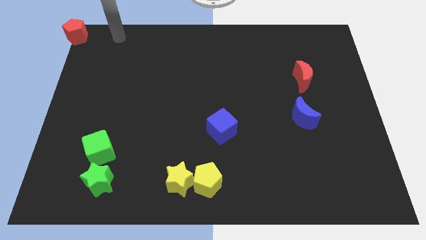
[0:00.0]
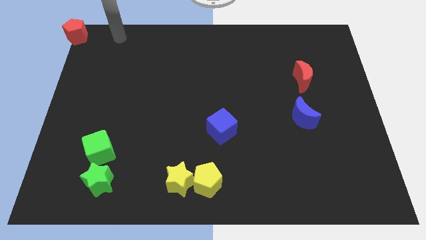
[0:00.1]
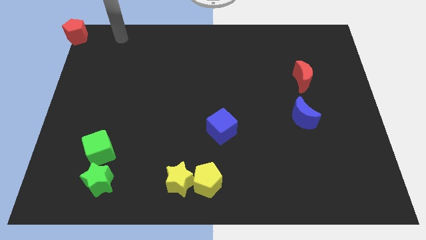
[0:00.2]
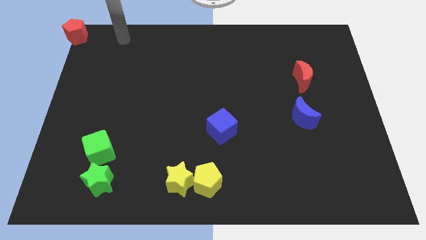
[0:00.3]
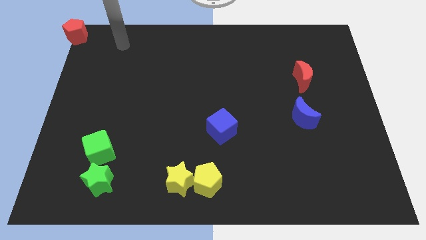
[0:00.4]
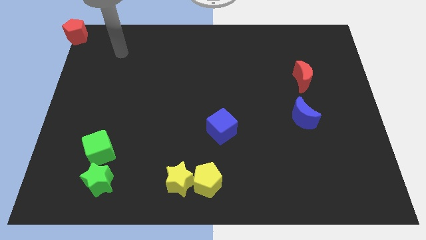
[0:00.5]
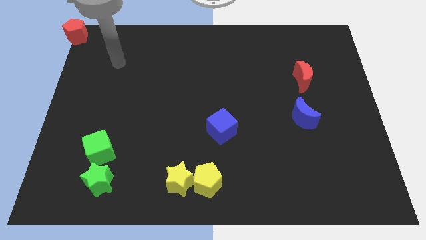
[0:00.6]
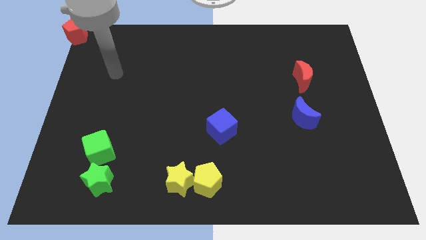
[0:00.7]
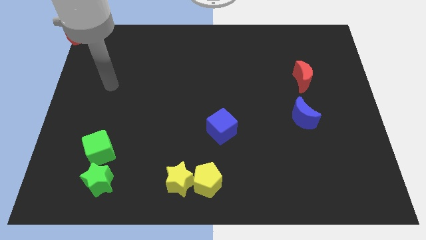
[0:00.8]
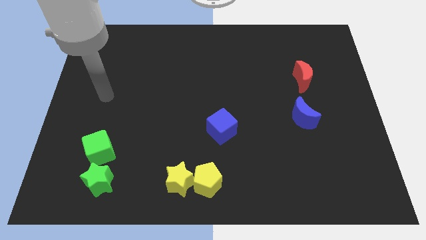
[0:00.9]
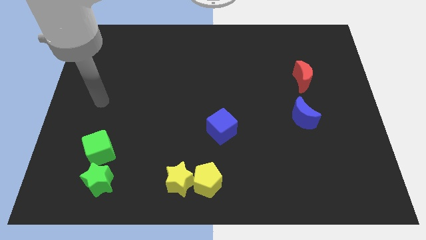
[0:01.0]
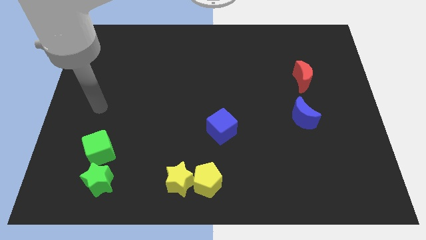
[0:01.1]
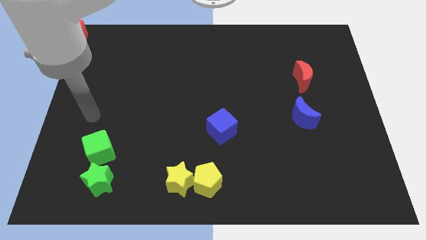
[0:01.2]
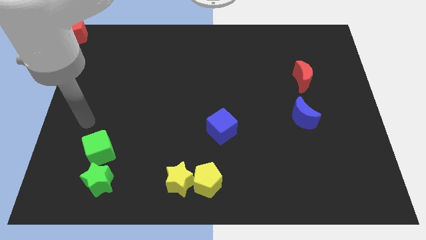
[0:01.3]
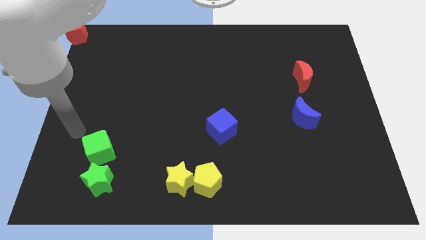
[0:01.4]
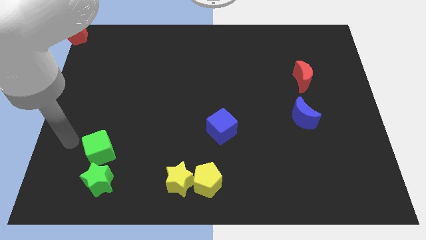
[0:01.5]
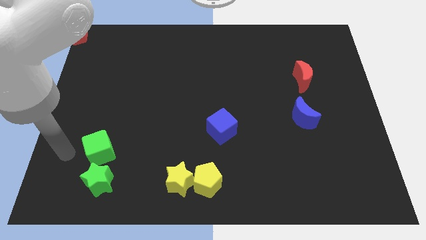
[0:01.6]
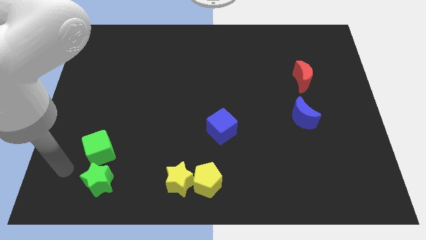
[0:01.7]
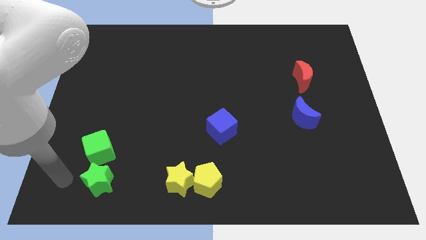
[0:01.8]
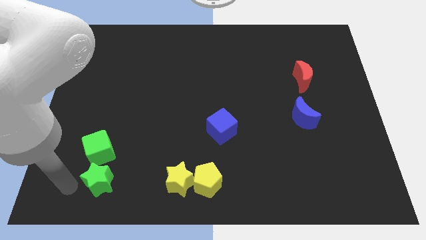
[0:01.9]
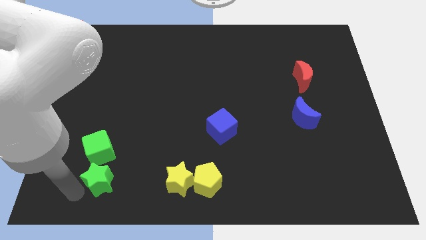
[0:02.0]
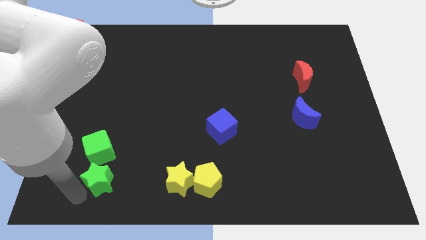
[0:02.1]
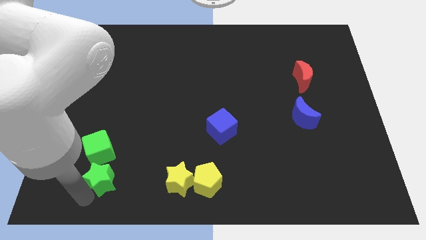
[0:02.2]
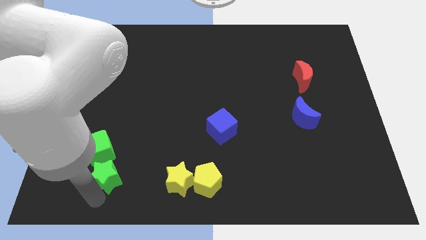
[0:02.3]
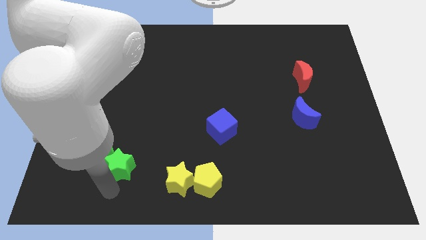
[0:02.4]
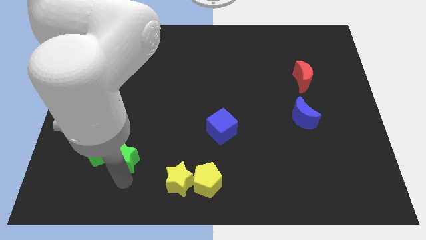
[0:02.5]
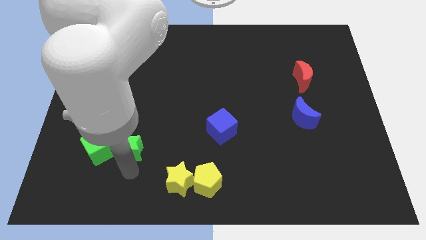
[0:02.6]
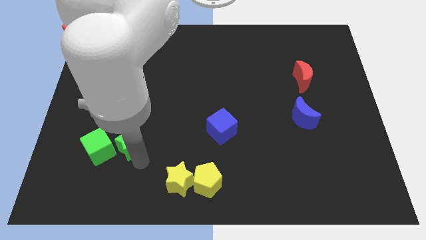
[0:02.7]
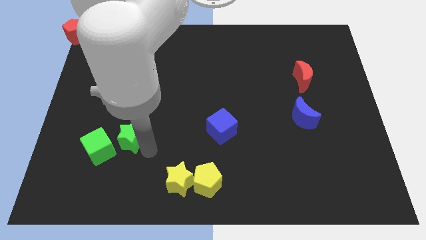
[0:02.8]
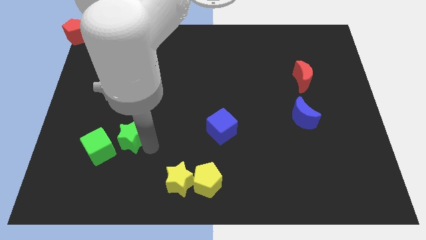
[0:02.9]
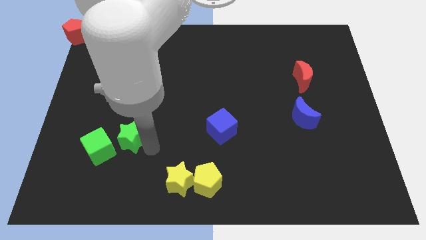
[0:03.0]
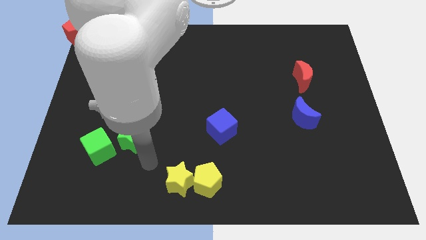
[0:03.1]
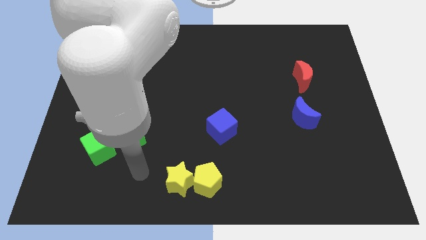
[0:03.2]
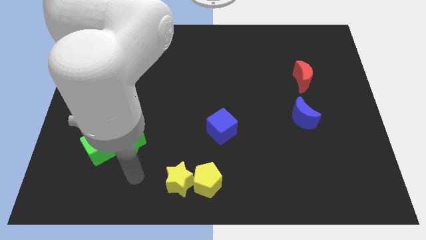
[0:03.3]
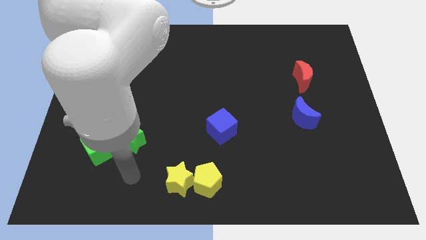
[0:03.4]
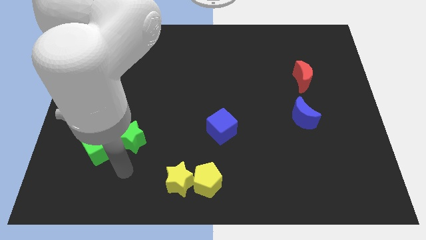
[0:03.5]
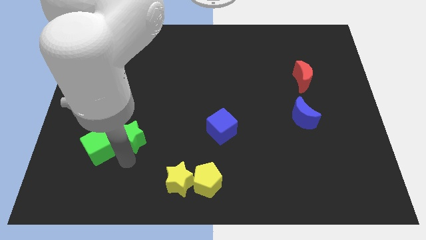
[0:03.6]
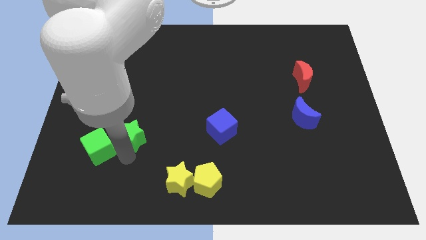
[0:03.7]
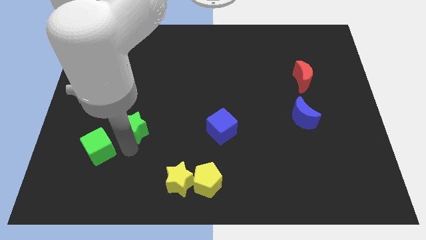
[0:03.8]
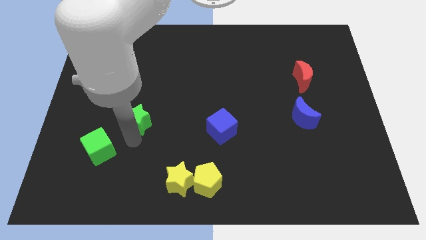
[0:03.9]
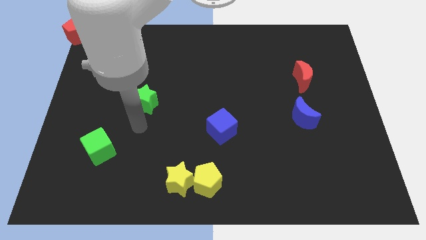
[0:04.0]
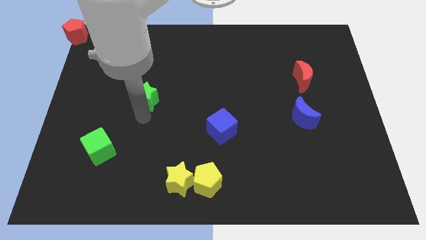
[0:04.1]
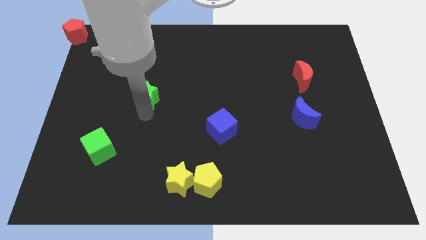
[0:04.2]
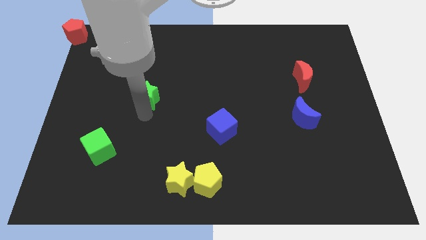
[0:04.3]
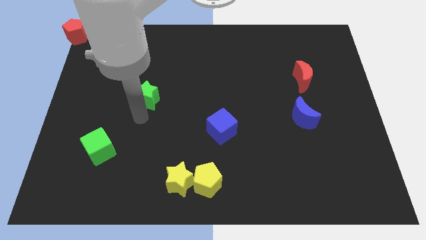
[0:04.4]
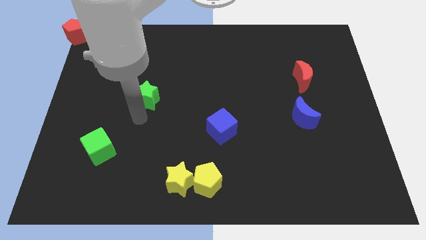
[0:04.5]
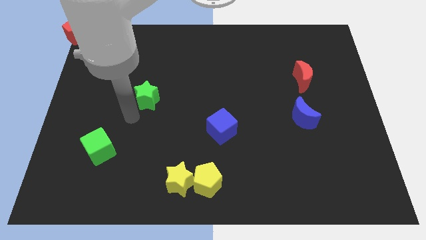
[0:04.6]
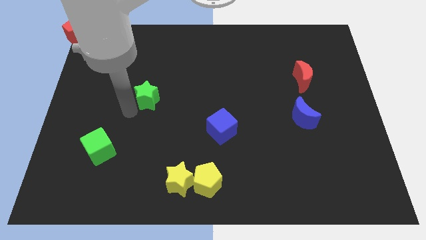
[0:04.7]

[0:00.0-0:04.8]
place the green star above the green cube

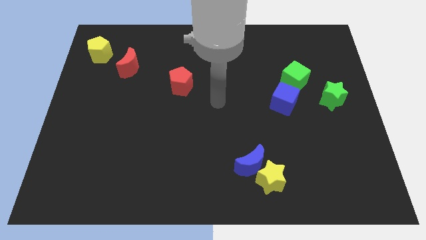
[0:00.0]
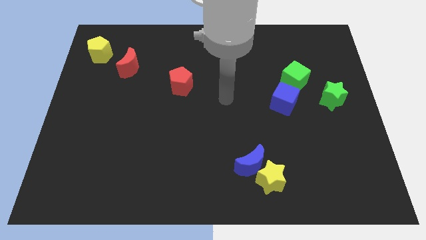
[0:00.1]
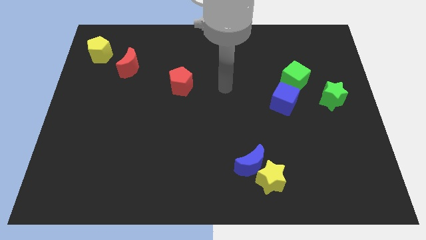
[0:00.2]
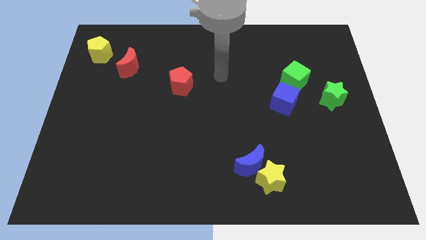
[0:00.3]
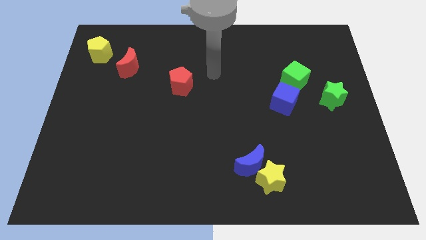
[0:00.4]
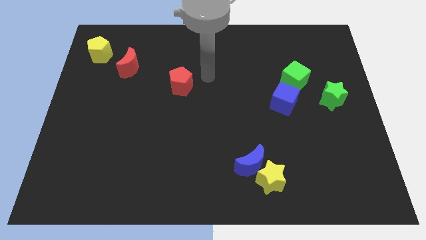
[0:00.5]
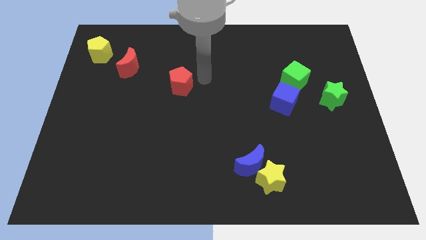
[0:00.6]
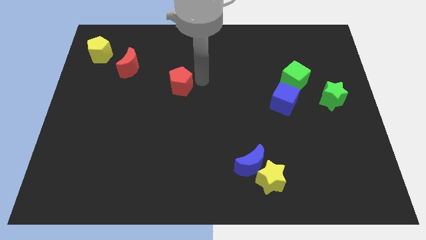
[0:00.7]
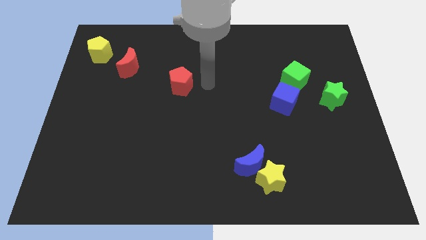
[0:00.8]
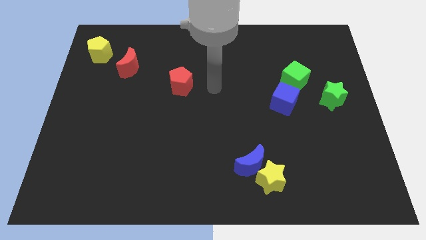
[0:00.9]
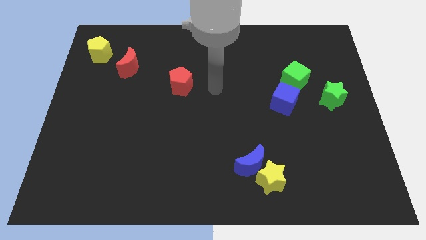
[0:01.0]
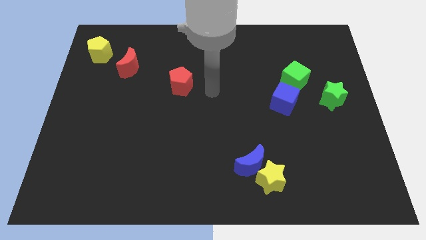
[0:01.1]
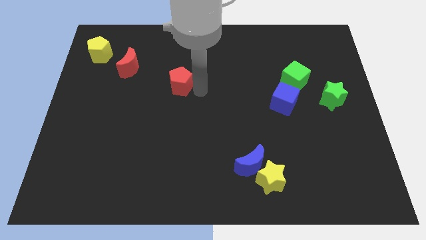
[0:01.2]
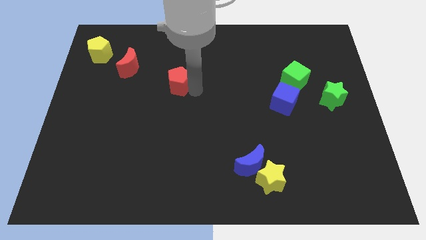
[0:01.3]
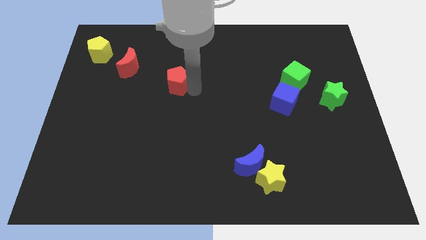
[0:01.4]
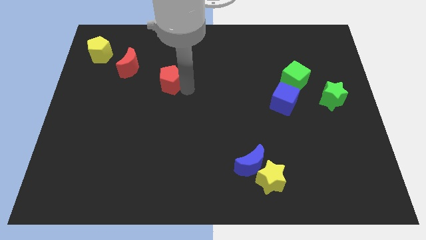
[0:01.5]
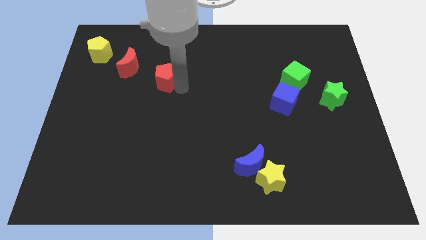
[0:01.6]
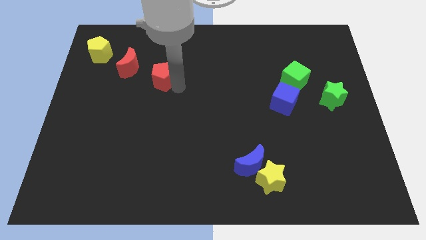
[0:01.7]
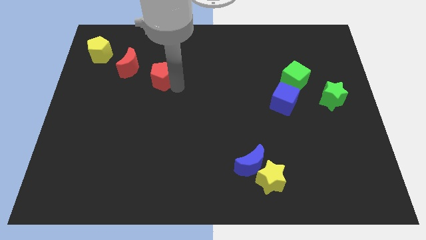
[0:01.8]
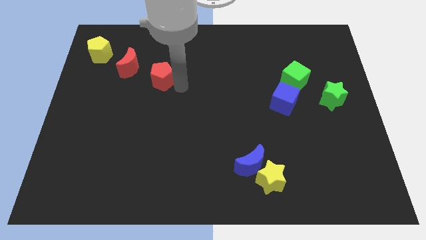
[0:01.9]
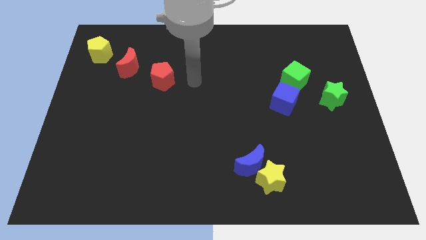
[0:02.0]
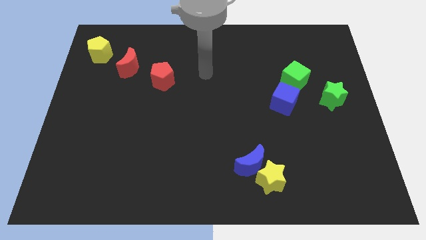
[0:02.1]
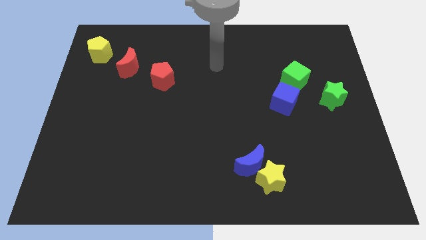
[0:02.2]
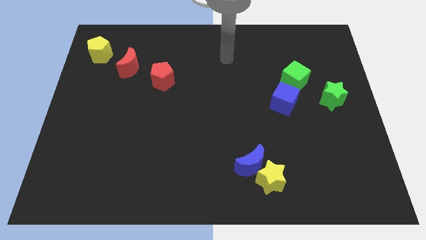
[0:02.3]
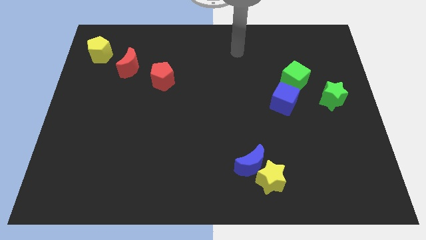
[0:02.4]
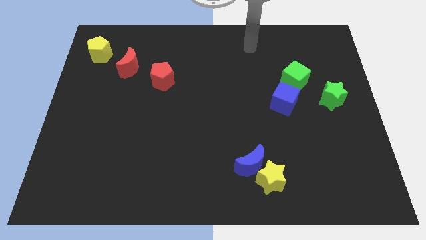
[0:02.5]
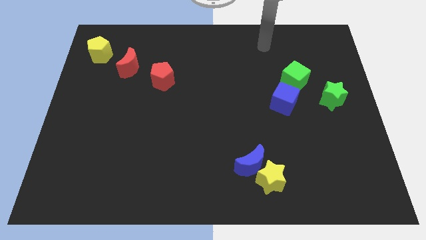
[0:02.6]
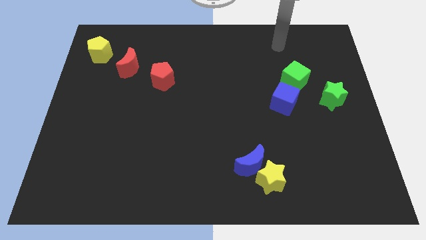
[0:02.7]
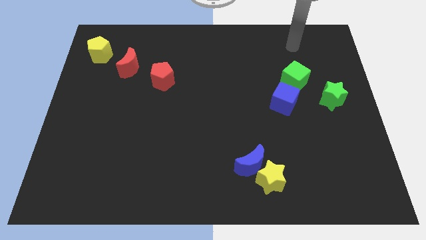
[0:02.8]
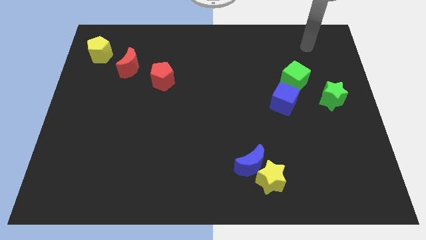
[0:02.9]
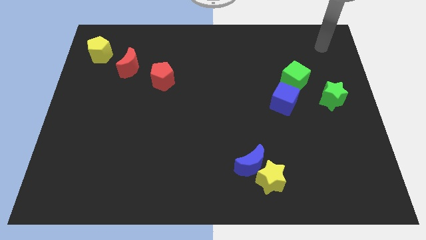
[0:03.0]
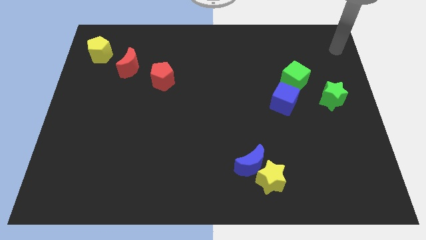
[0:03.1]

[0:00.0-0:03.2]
push the red pentagon close to the red crescent

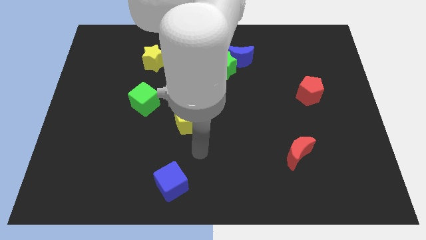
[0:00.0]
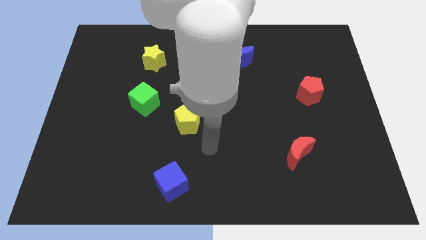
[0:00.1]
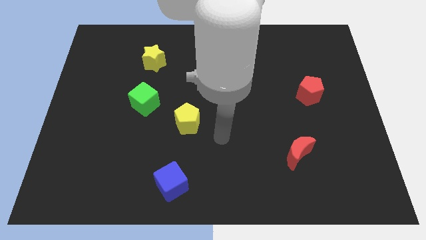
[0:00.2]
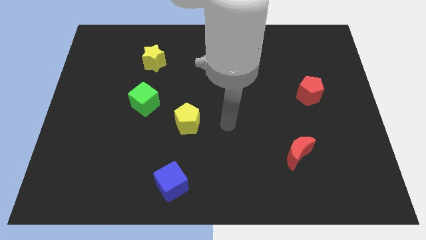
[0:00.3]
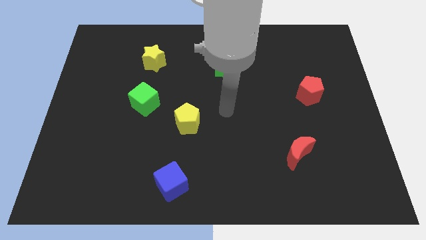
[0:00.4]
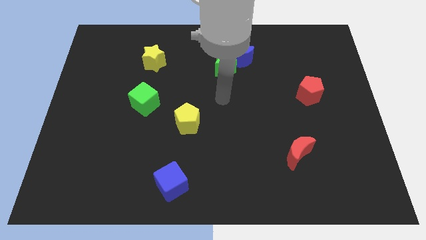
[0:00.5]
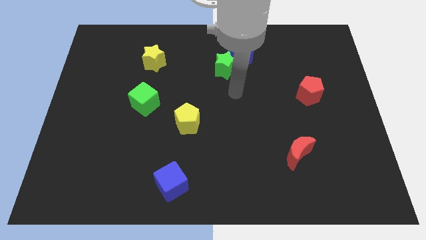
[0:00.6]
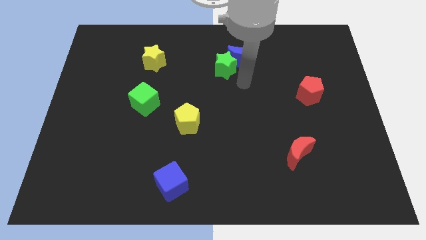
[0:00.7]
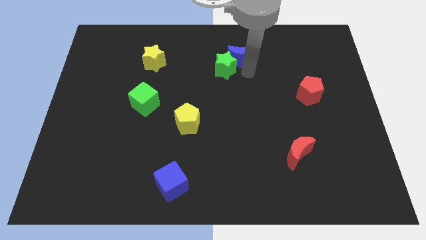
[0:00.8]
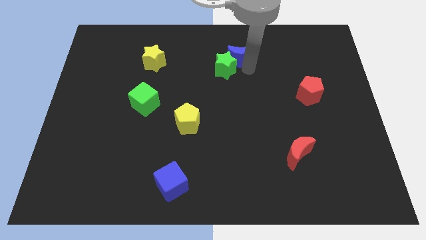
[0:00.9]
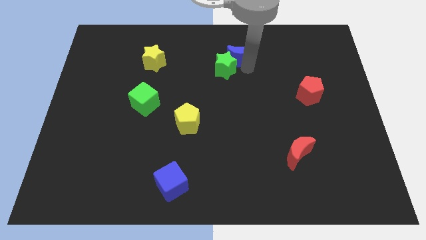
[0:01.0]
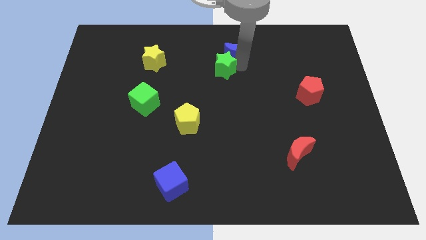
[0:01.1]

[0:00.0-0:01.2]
move your arm towards blue crescent
